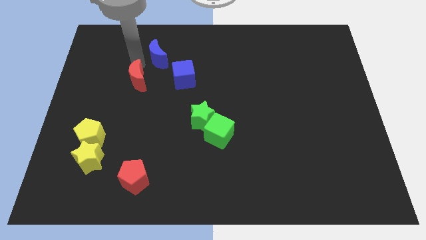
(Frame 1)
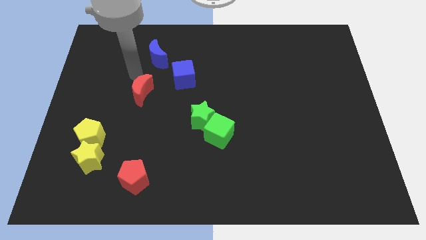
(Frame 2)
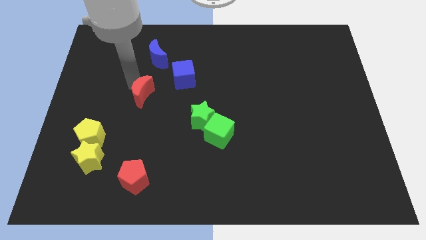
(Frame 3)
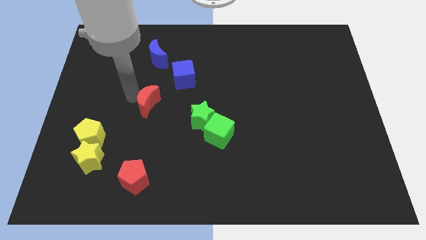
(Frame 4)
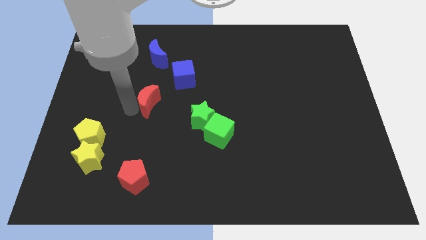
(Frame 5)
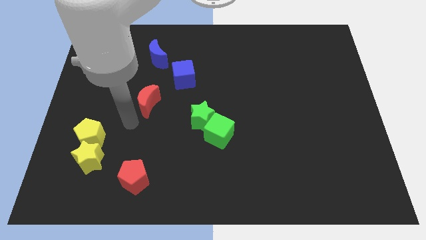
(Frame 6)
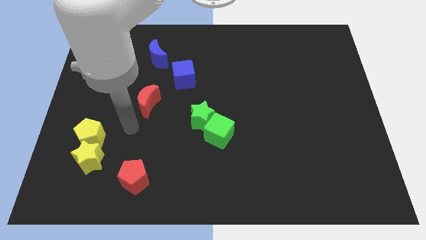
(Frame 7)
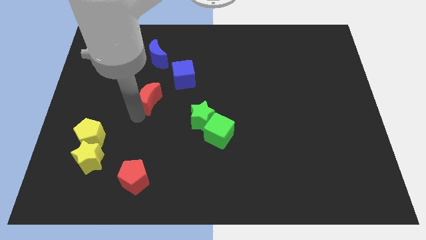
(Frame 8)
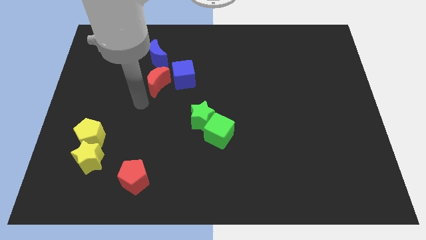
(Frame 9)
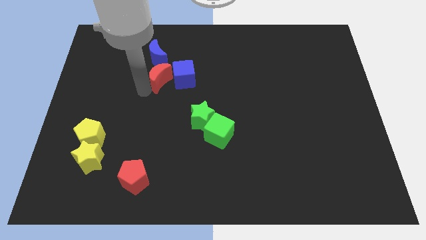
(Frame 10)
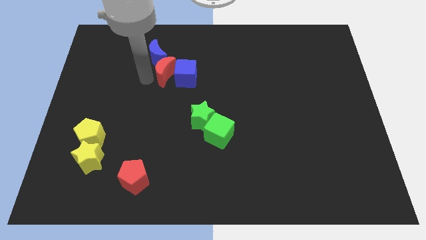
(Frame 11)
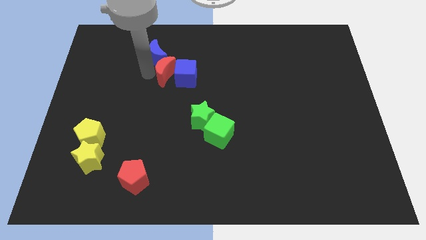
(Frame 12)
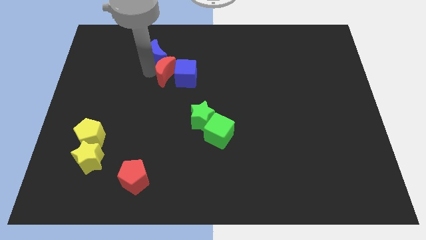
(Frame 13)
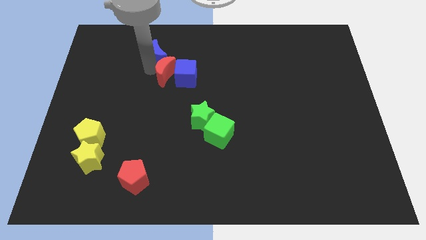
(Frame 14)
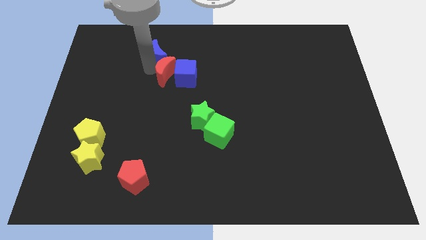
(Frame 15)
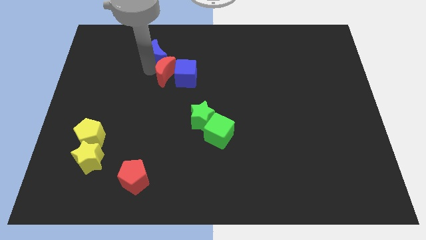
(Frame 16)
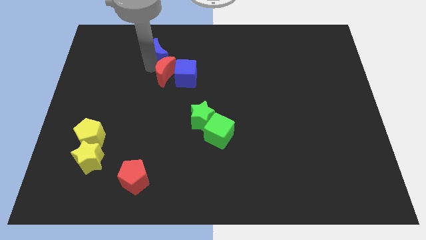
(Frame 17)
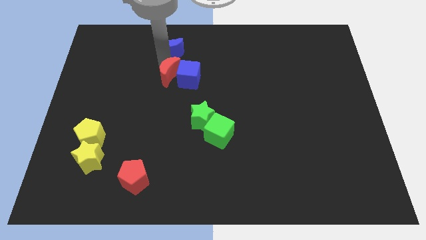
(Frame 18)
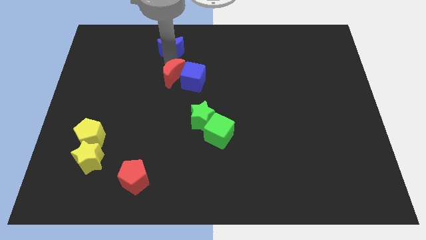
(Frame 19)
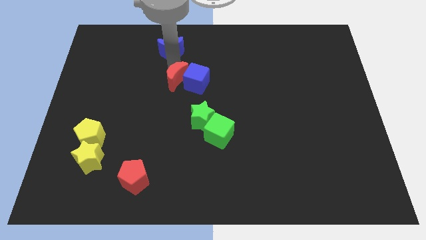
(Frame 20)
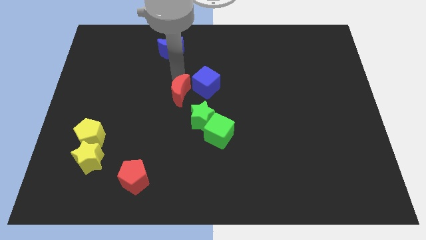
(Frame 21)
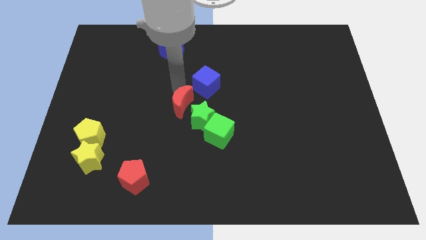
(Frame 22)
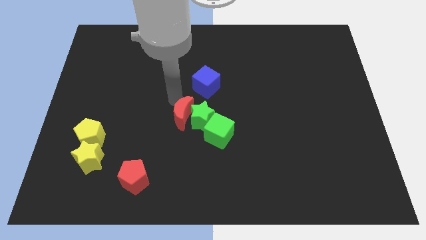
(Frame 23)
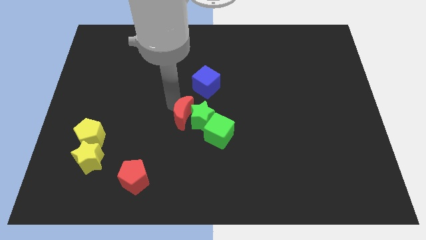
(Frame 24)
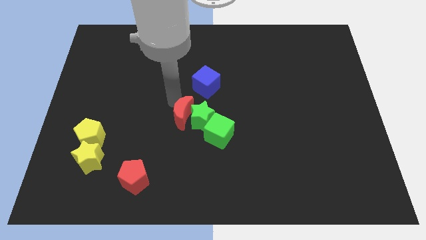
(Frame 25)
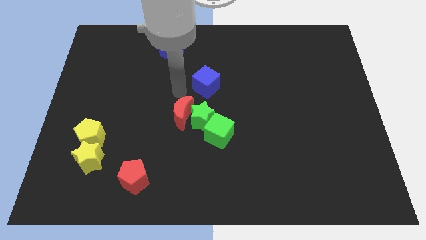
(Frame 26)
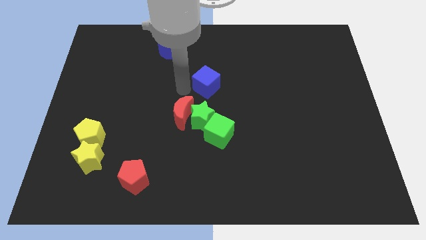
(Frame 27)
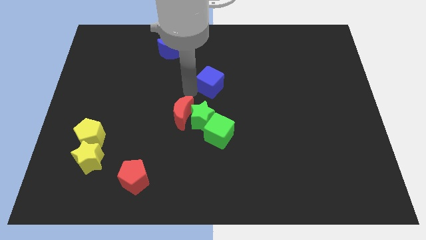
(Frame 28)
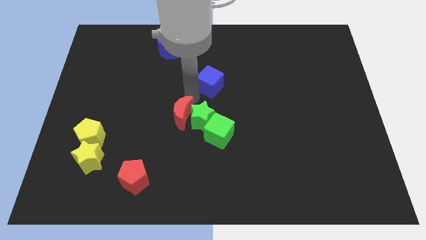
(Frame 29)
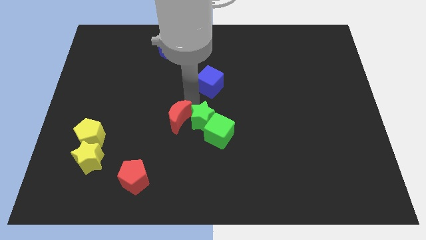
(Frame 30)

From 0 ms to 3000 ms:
push red crescent beside green star

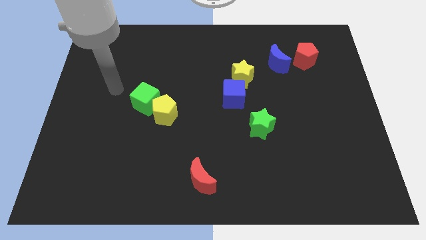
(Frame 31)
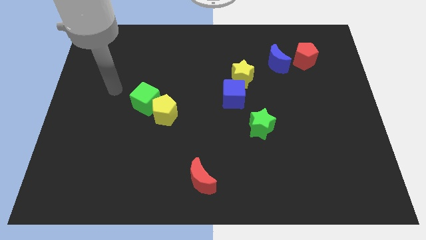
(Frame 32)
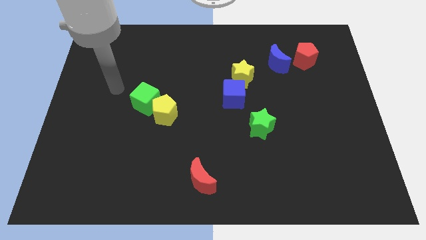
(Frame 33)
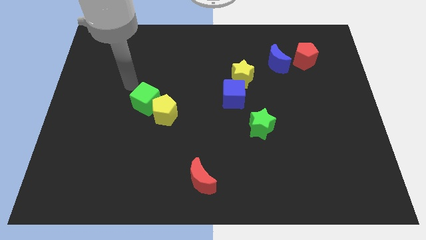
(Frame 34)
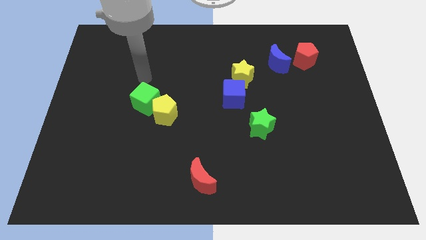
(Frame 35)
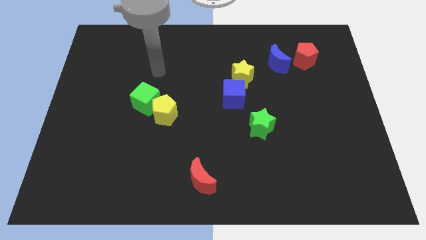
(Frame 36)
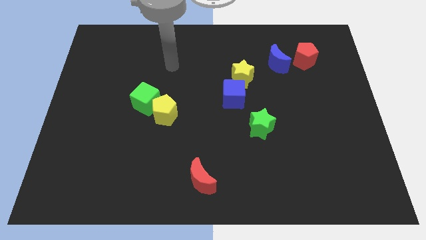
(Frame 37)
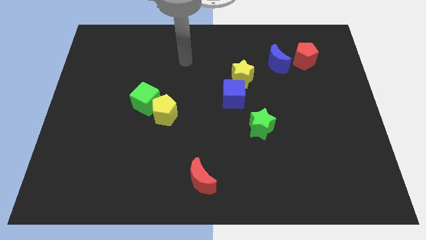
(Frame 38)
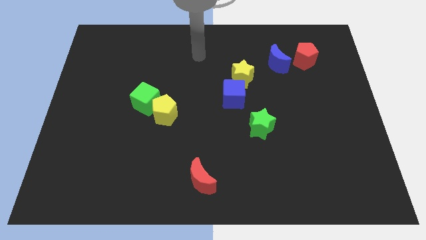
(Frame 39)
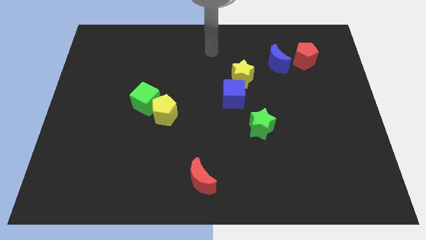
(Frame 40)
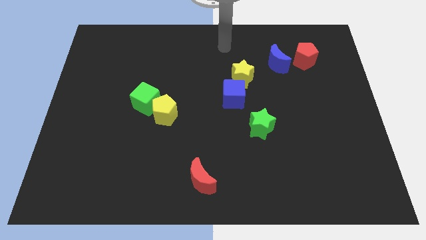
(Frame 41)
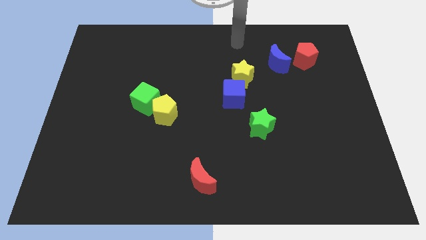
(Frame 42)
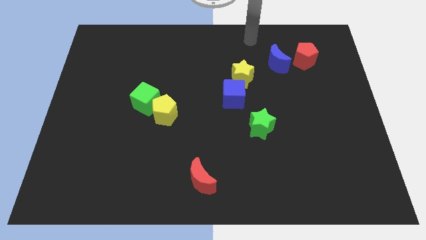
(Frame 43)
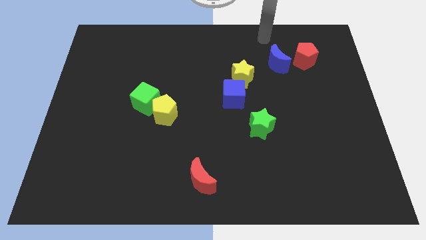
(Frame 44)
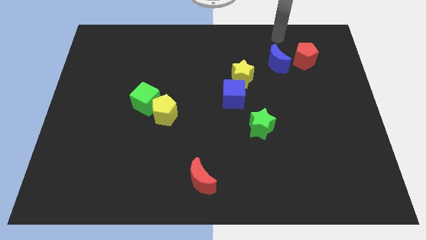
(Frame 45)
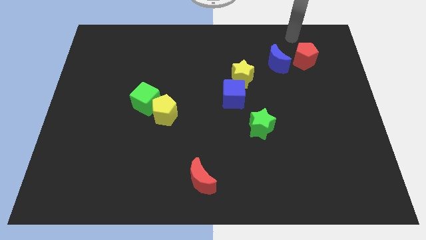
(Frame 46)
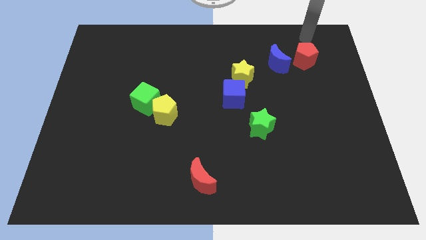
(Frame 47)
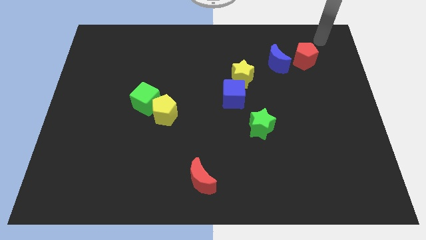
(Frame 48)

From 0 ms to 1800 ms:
go and point your hand above the red pentagon

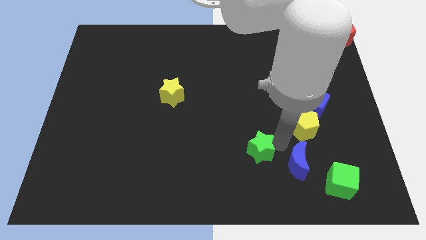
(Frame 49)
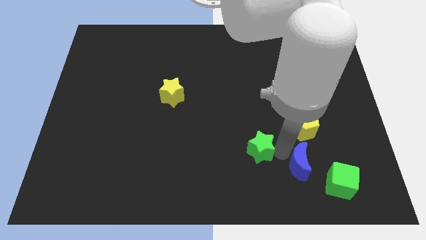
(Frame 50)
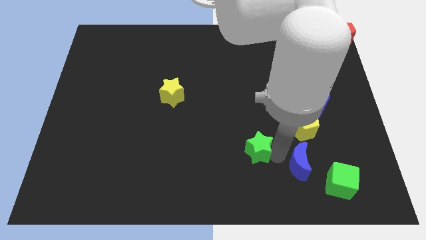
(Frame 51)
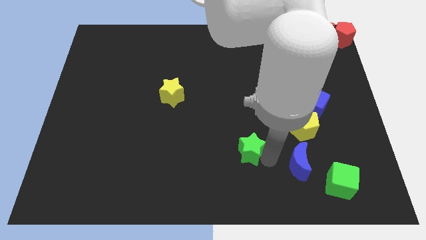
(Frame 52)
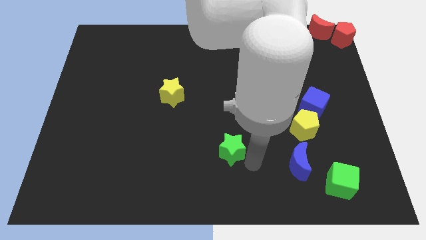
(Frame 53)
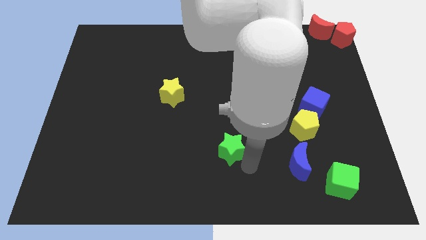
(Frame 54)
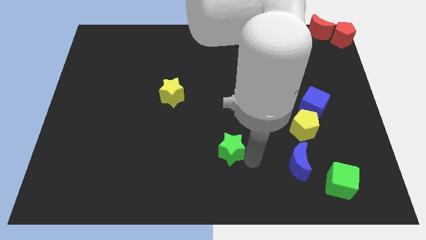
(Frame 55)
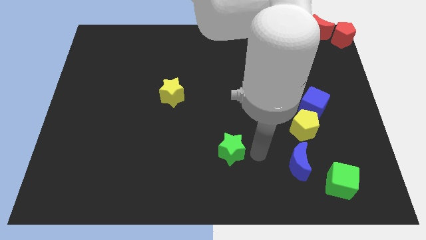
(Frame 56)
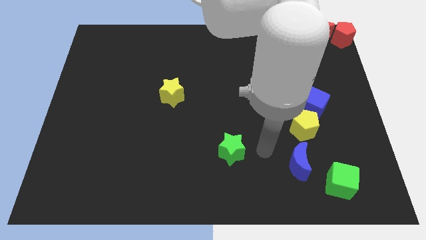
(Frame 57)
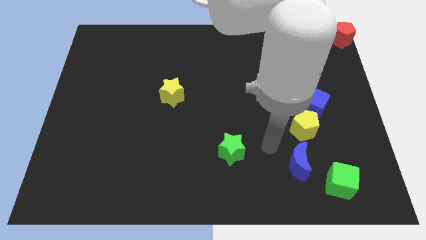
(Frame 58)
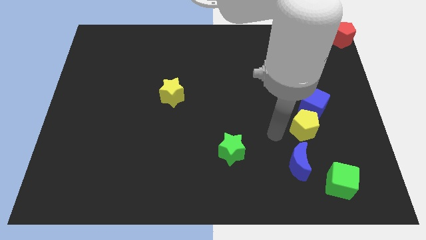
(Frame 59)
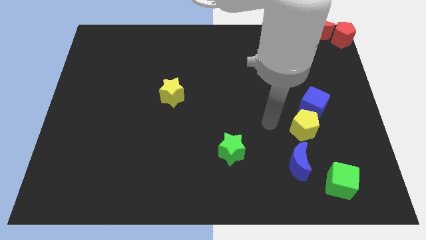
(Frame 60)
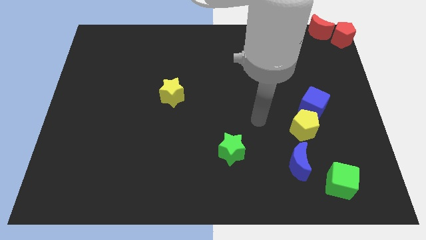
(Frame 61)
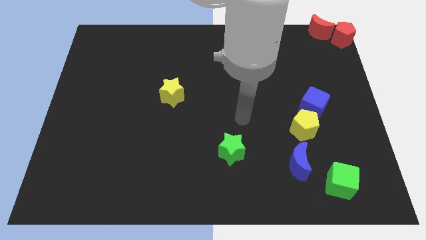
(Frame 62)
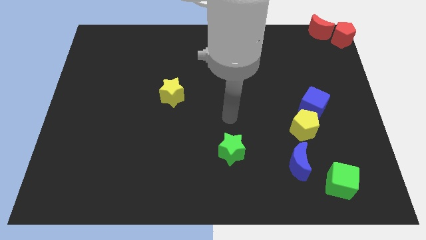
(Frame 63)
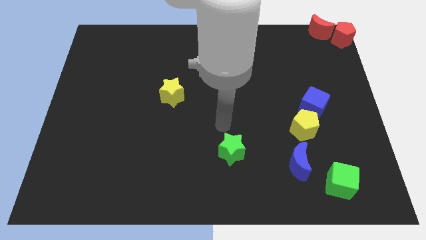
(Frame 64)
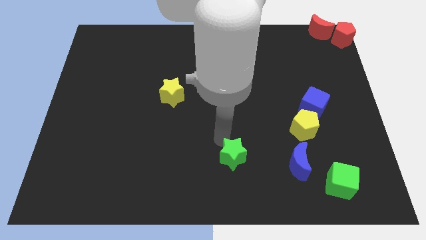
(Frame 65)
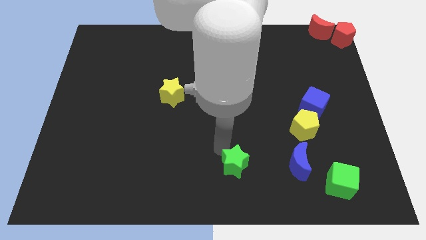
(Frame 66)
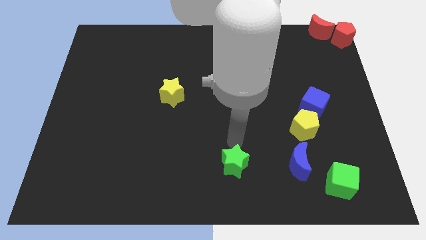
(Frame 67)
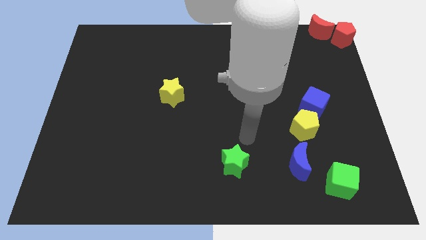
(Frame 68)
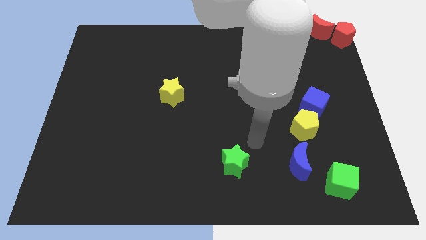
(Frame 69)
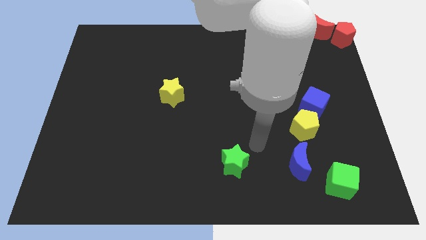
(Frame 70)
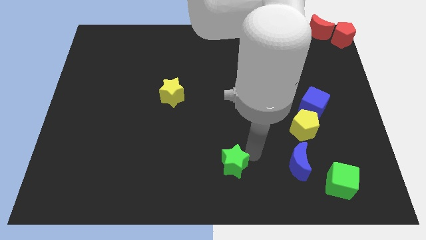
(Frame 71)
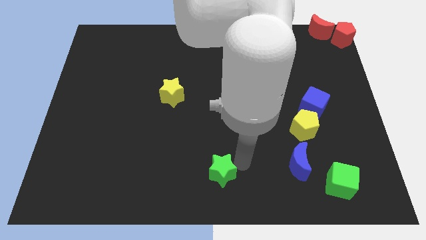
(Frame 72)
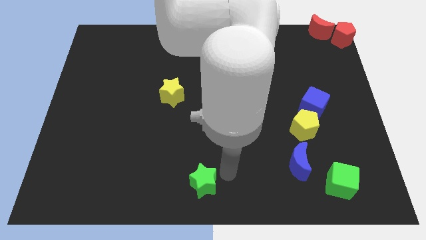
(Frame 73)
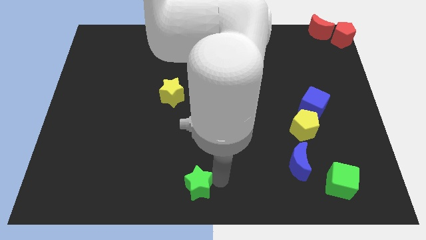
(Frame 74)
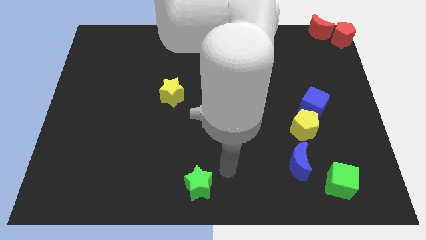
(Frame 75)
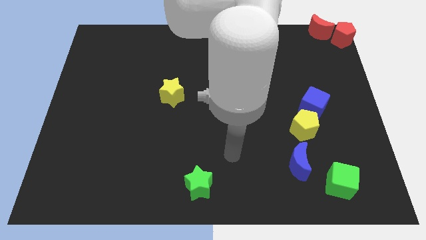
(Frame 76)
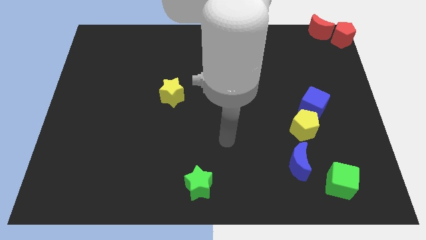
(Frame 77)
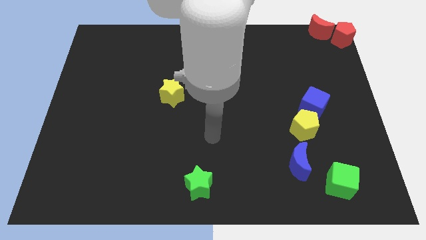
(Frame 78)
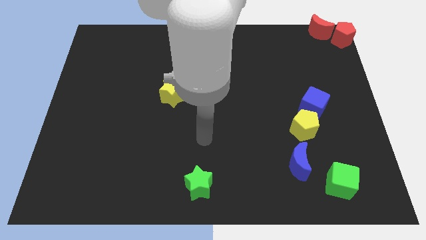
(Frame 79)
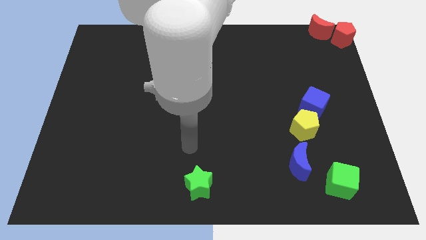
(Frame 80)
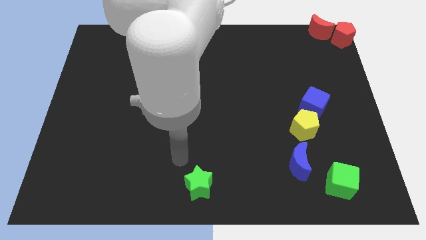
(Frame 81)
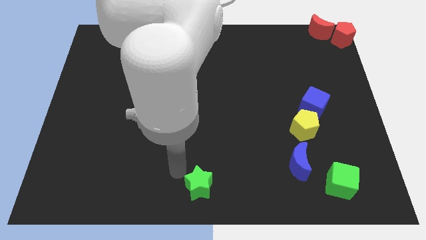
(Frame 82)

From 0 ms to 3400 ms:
move the green star to the bottom center of the board

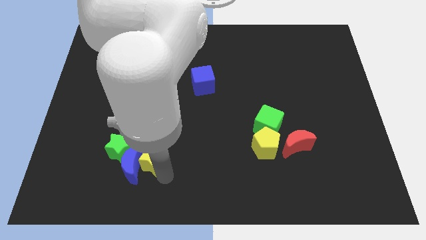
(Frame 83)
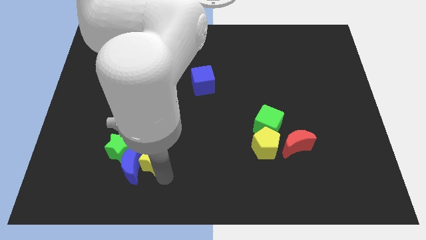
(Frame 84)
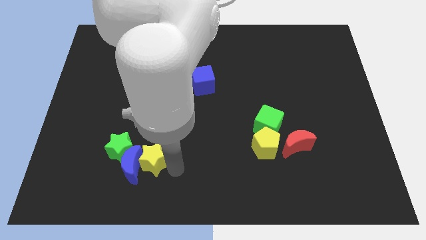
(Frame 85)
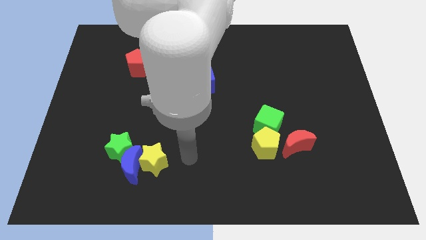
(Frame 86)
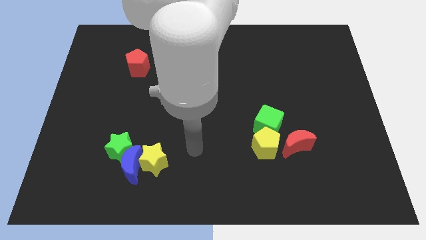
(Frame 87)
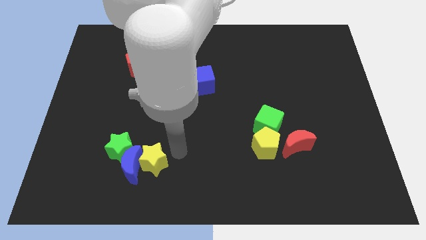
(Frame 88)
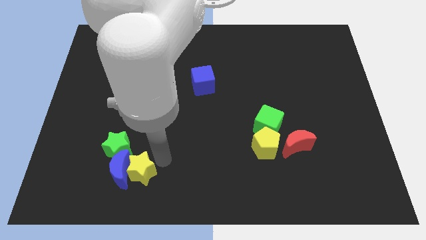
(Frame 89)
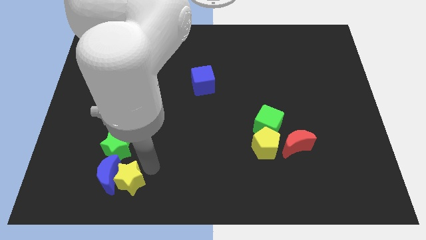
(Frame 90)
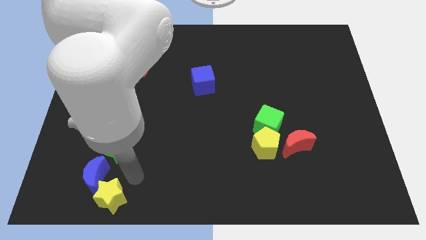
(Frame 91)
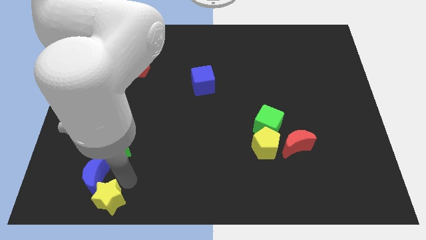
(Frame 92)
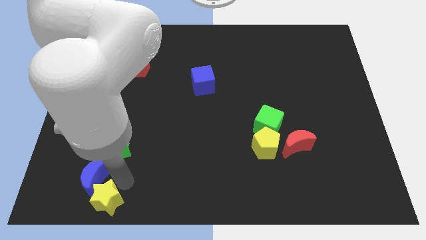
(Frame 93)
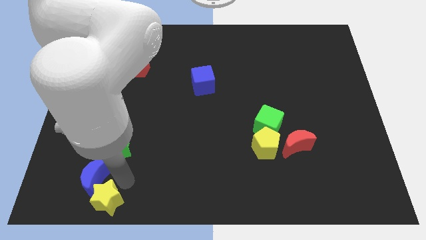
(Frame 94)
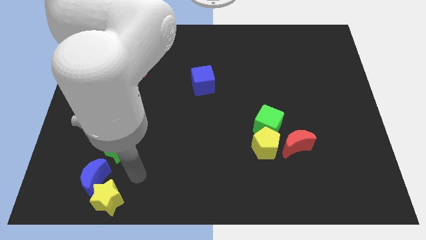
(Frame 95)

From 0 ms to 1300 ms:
separate the blue moon and yellow star from the green star
